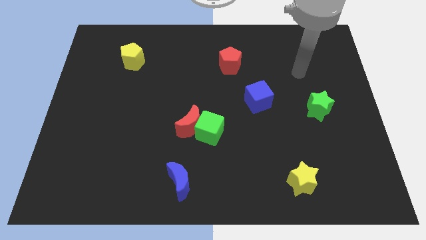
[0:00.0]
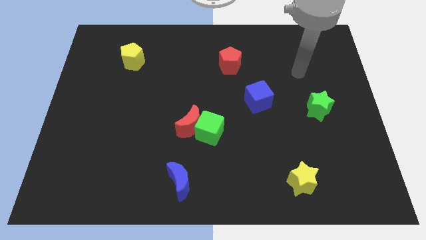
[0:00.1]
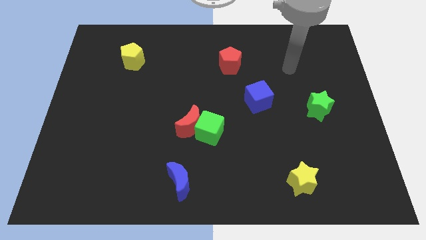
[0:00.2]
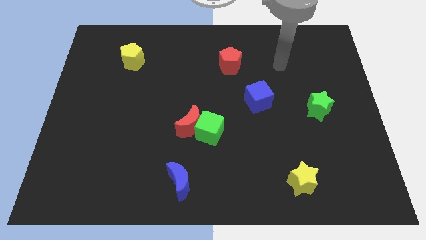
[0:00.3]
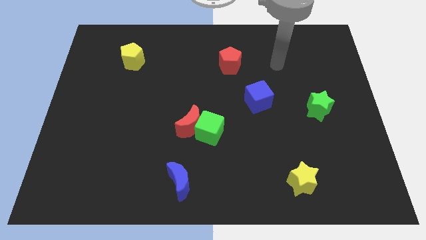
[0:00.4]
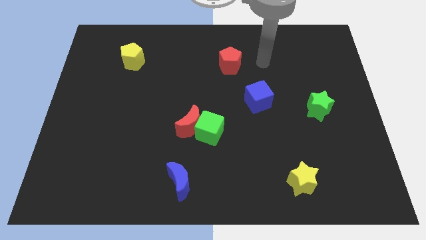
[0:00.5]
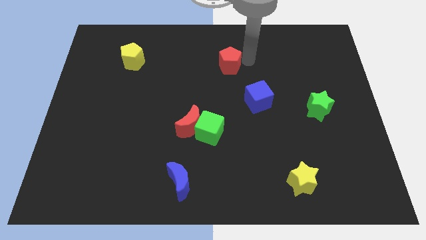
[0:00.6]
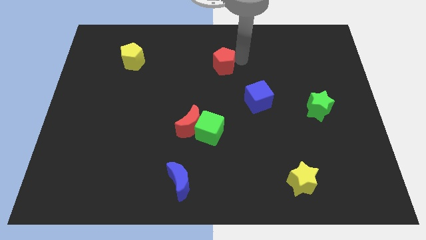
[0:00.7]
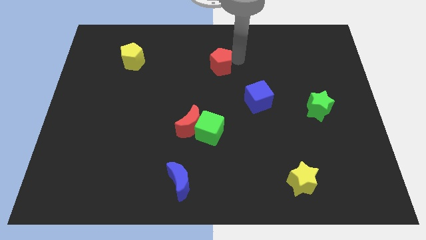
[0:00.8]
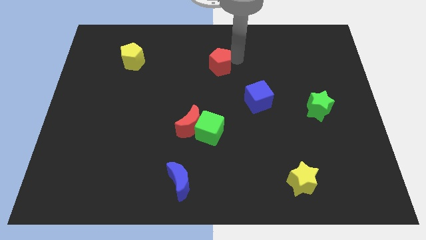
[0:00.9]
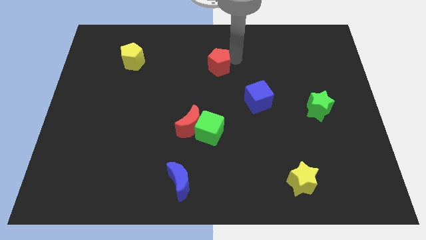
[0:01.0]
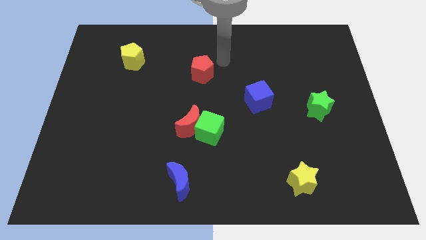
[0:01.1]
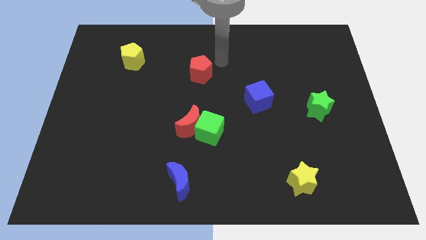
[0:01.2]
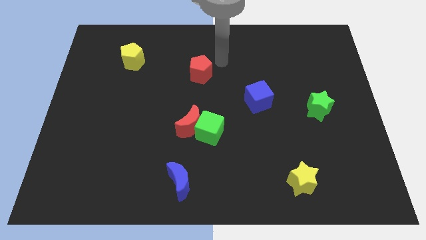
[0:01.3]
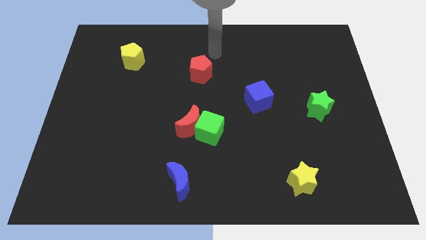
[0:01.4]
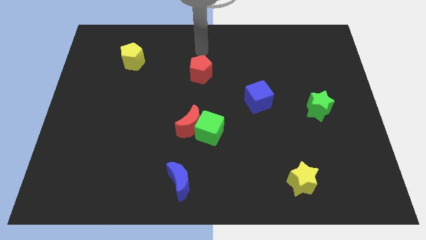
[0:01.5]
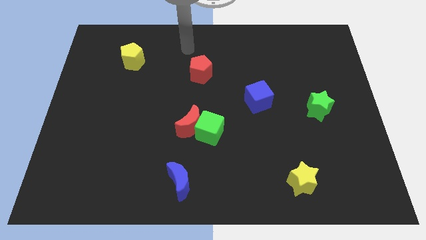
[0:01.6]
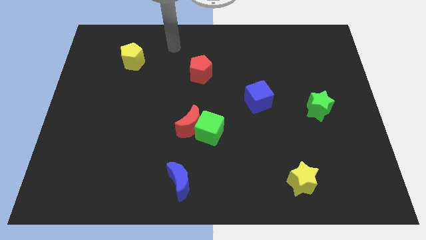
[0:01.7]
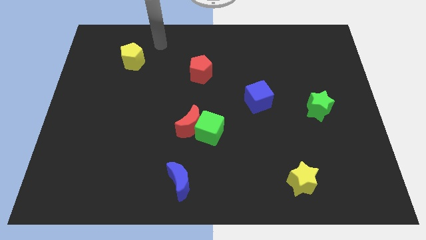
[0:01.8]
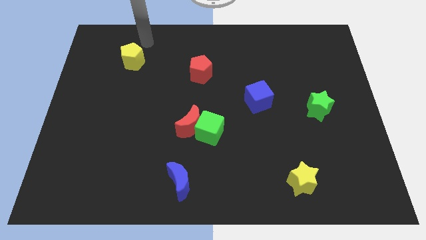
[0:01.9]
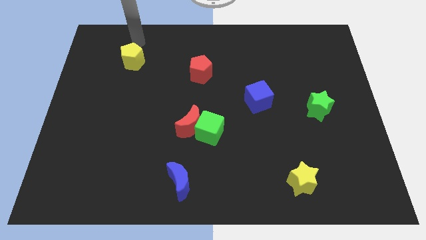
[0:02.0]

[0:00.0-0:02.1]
slightly push red pentagon towards left

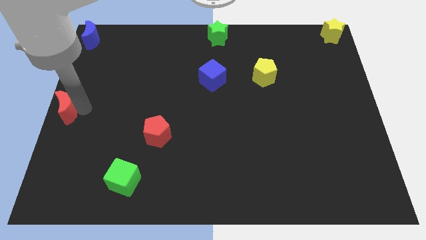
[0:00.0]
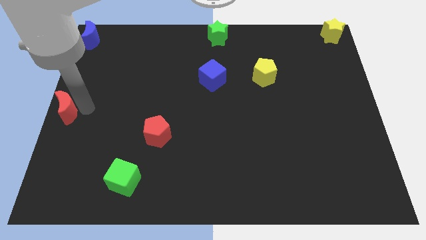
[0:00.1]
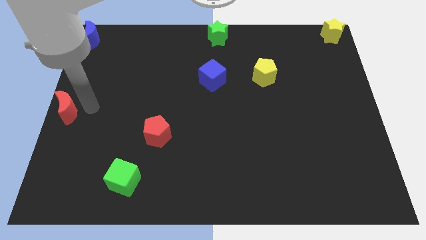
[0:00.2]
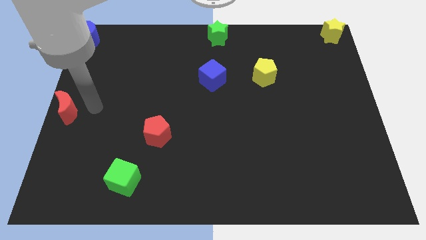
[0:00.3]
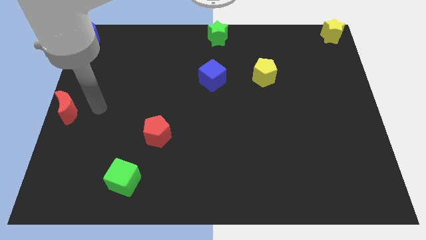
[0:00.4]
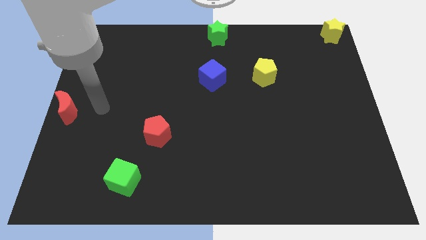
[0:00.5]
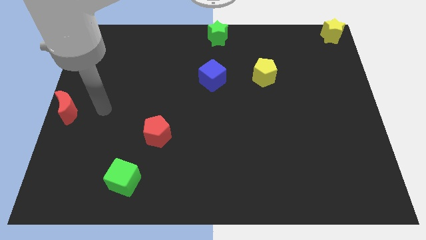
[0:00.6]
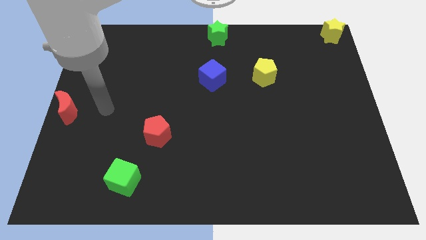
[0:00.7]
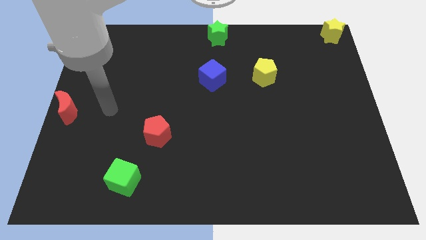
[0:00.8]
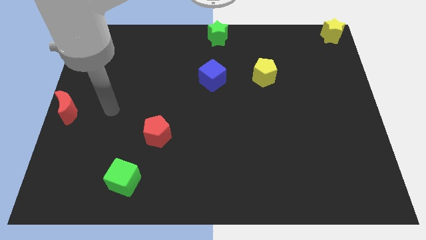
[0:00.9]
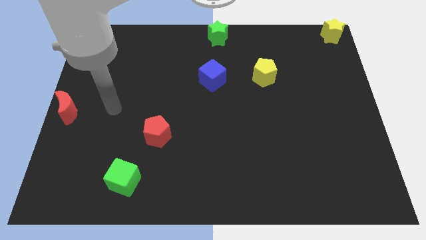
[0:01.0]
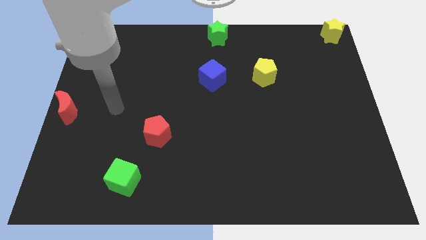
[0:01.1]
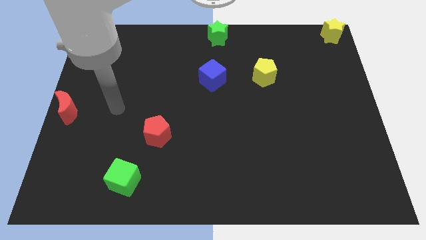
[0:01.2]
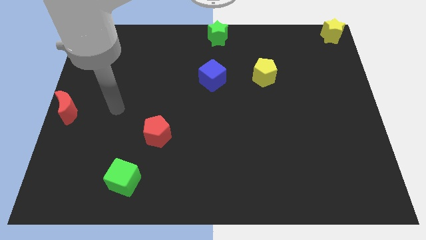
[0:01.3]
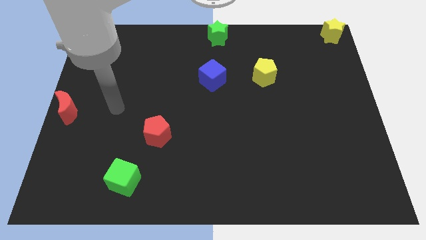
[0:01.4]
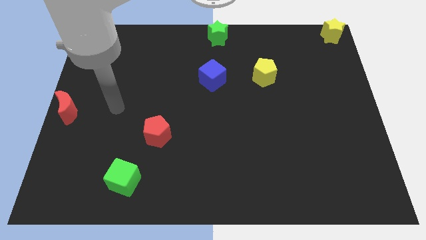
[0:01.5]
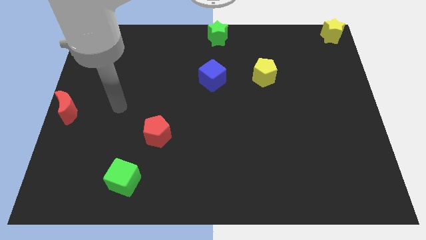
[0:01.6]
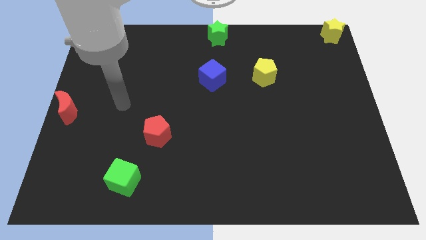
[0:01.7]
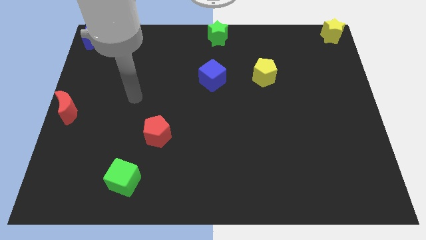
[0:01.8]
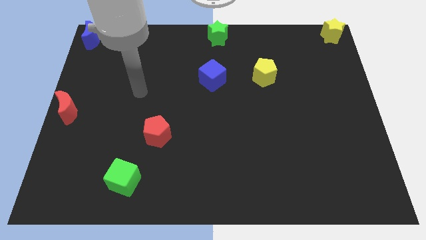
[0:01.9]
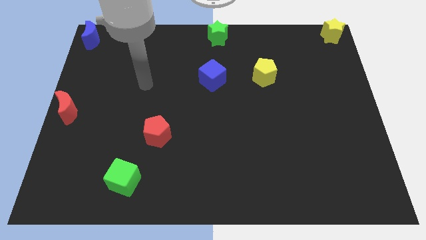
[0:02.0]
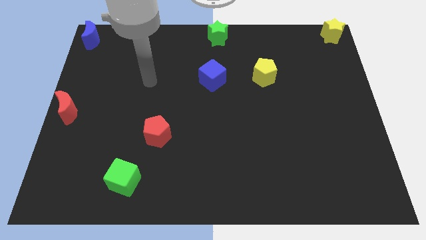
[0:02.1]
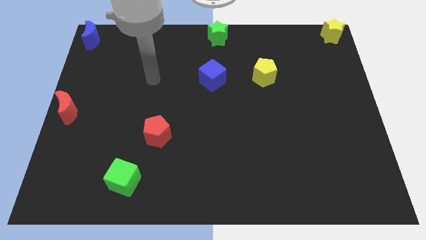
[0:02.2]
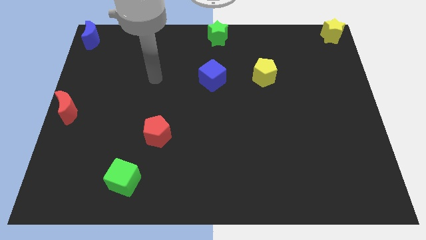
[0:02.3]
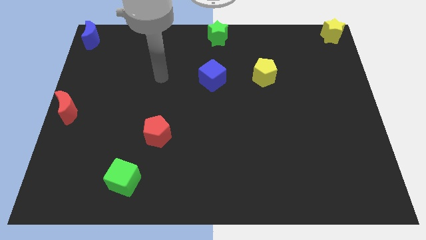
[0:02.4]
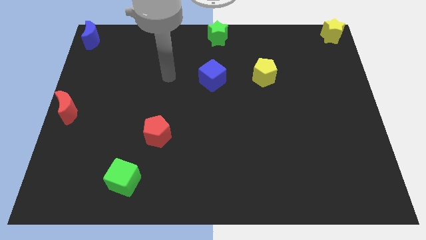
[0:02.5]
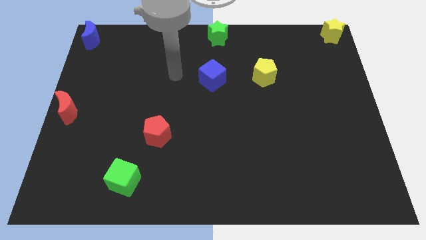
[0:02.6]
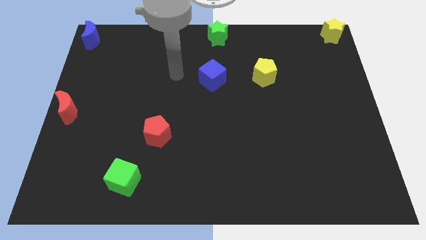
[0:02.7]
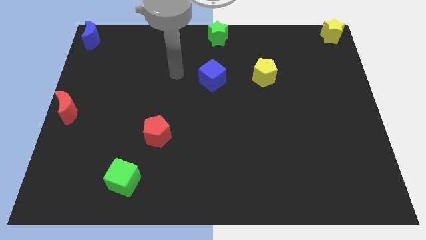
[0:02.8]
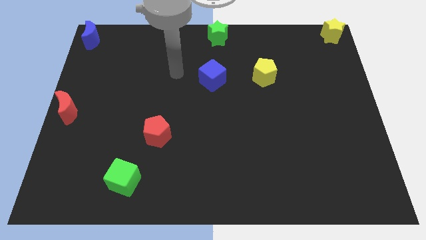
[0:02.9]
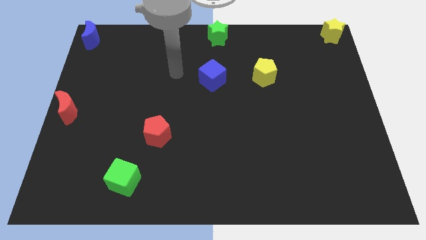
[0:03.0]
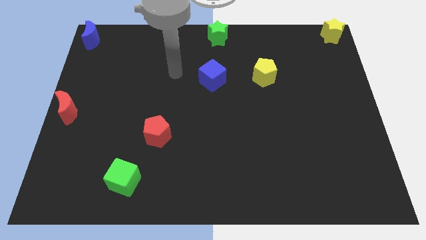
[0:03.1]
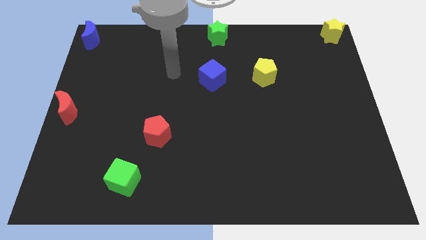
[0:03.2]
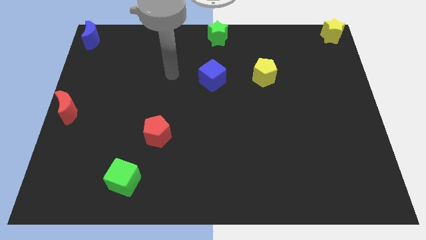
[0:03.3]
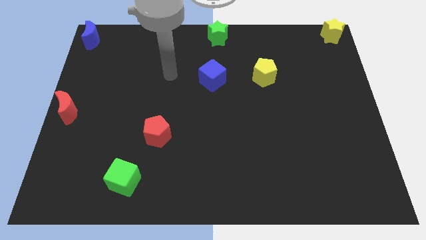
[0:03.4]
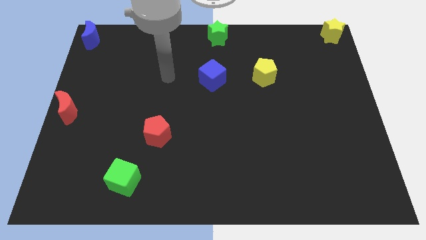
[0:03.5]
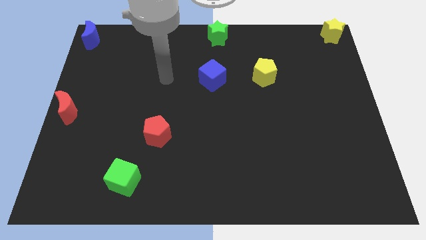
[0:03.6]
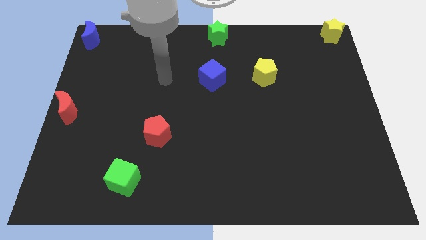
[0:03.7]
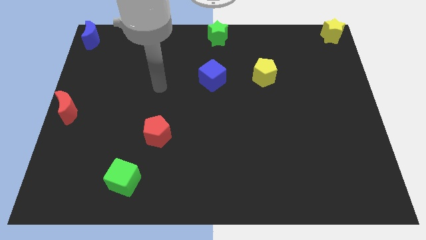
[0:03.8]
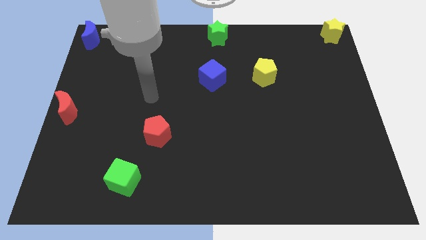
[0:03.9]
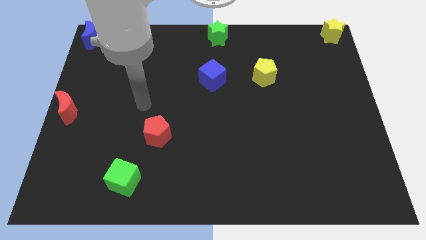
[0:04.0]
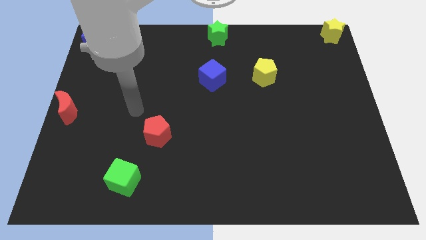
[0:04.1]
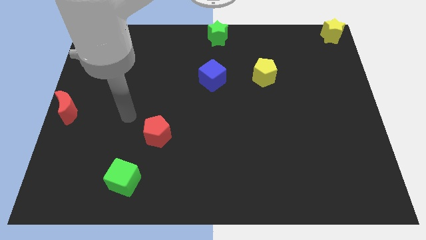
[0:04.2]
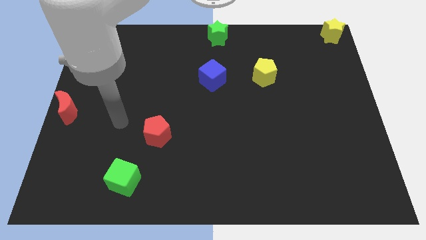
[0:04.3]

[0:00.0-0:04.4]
move the arm left to the red pentagon

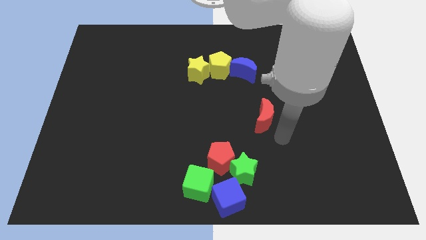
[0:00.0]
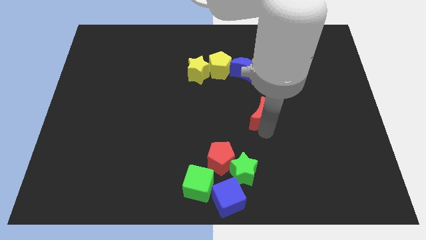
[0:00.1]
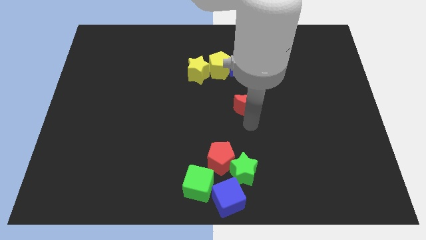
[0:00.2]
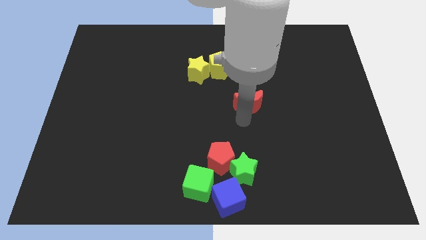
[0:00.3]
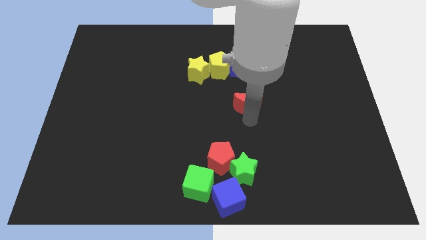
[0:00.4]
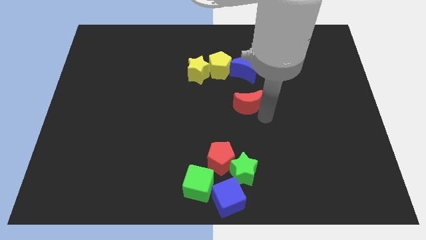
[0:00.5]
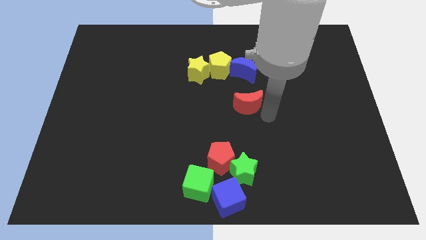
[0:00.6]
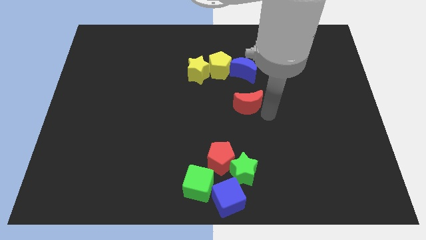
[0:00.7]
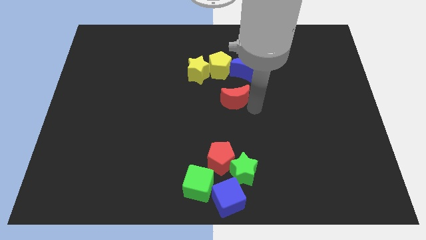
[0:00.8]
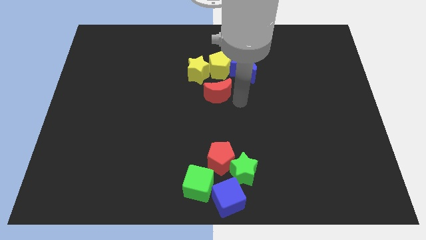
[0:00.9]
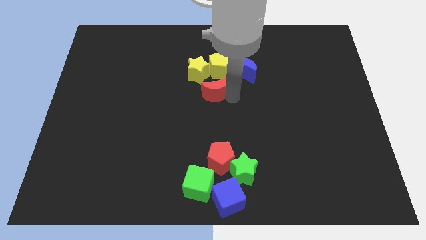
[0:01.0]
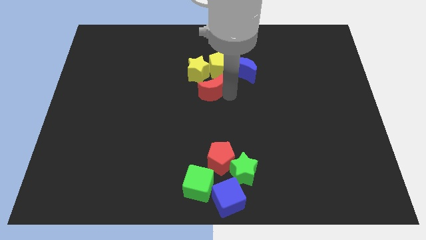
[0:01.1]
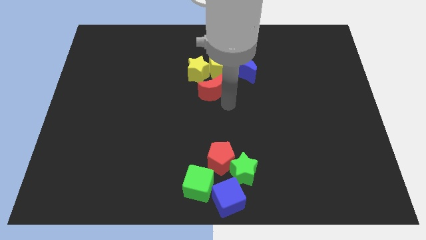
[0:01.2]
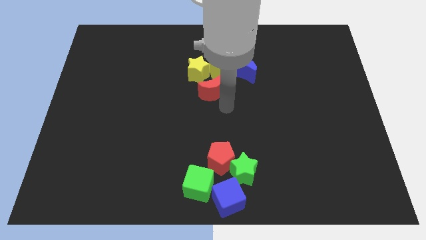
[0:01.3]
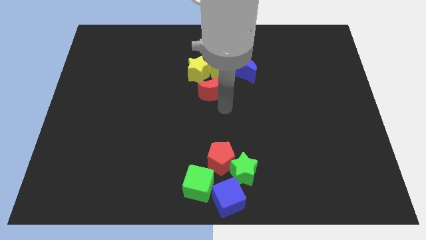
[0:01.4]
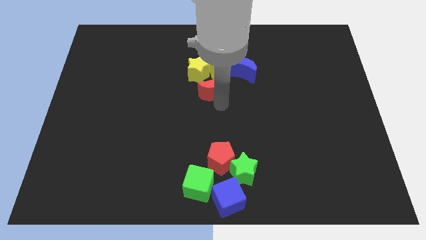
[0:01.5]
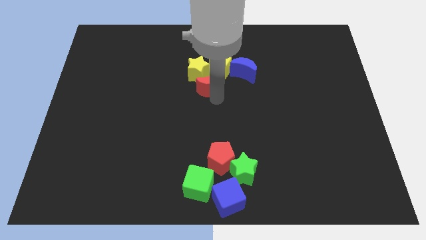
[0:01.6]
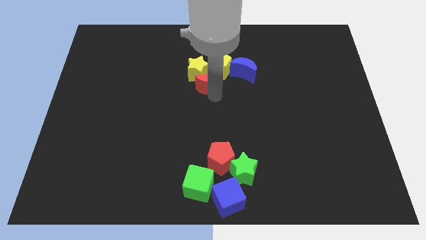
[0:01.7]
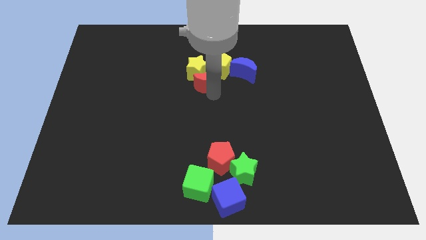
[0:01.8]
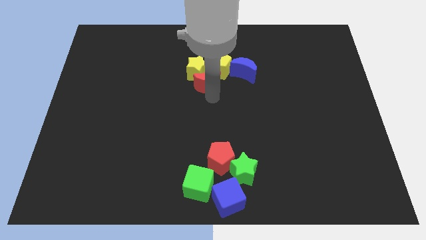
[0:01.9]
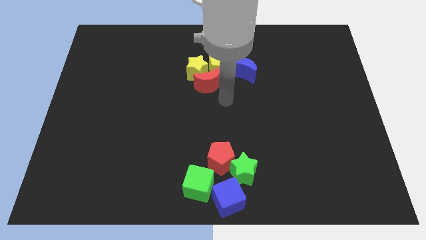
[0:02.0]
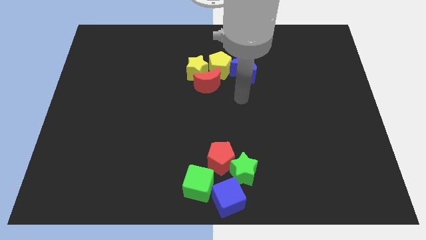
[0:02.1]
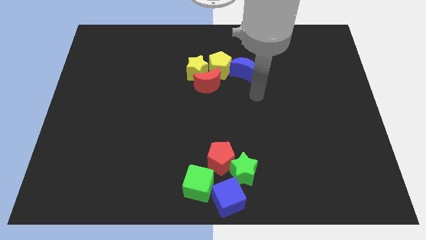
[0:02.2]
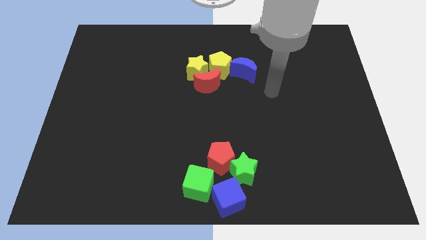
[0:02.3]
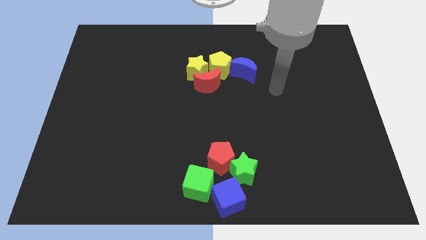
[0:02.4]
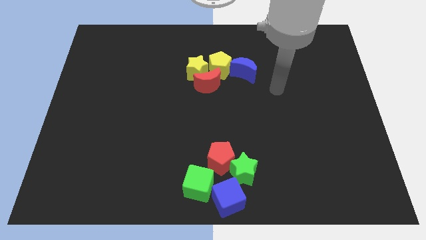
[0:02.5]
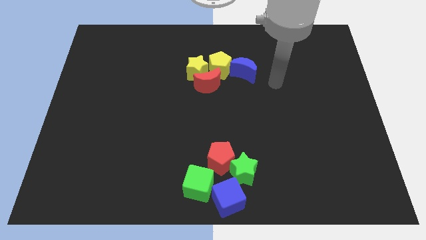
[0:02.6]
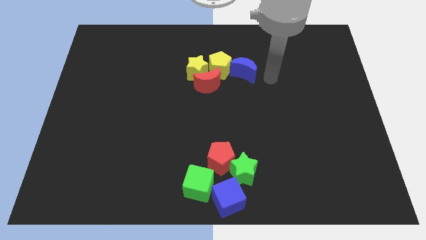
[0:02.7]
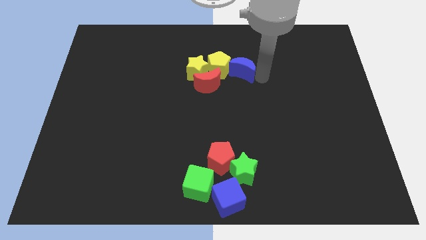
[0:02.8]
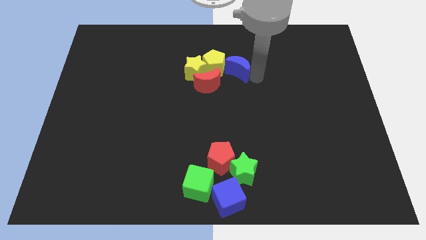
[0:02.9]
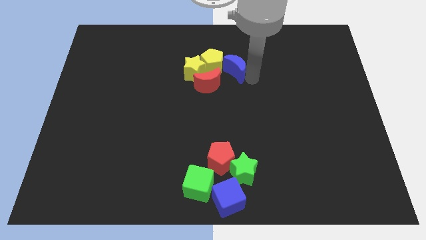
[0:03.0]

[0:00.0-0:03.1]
push the blue moon into the yellow pentagon
